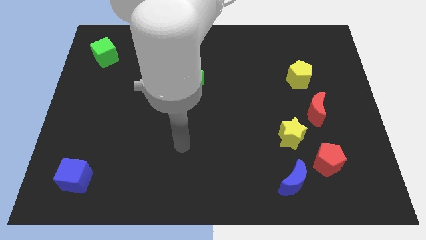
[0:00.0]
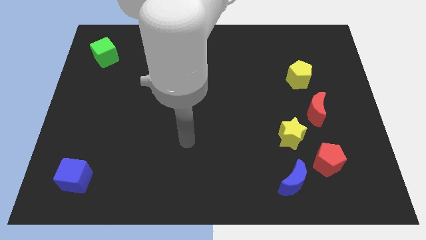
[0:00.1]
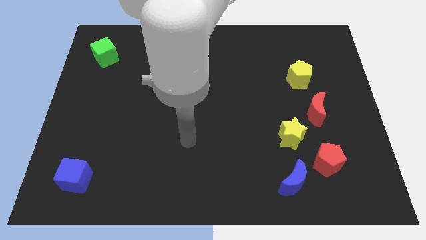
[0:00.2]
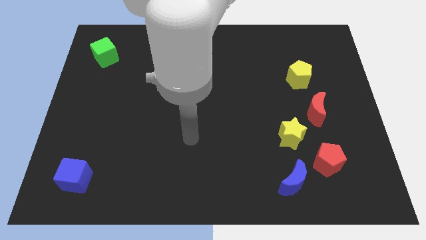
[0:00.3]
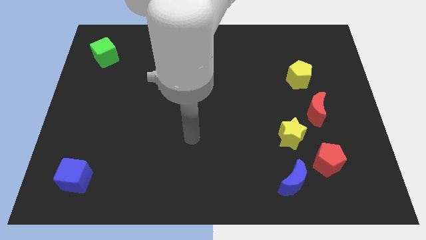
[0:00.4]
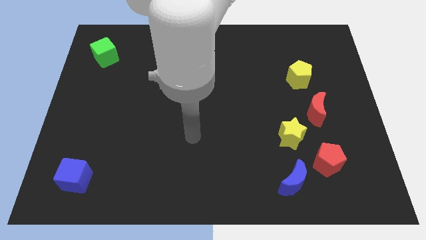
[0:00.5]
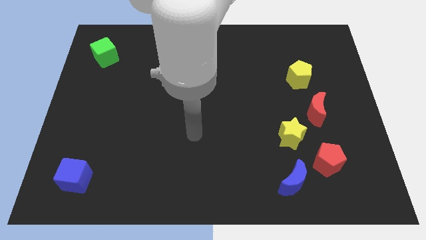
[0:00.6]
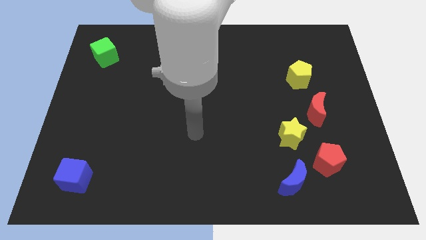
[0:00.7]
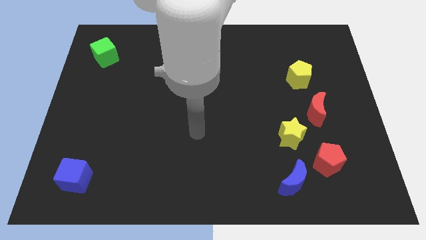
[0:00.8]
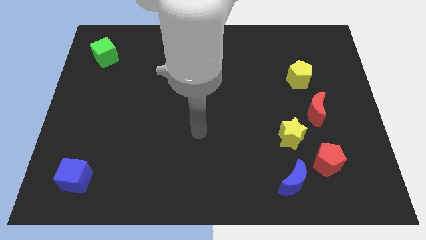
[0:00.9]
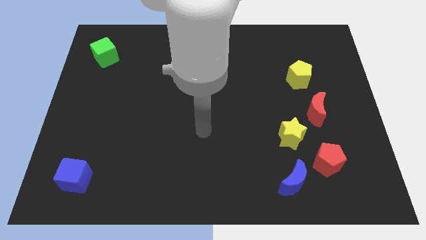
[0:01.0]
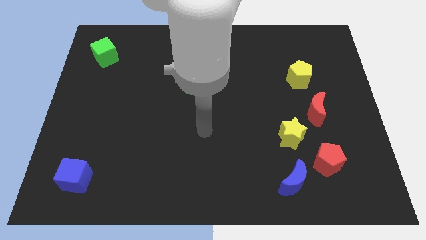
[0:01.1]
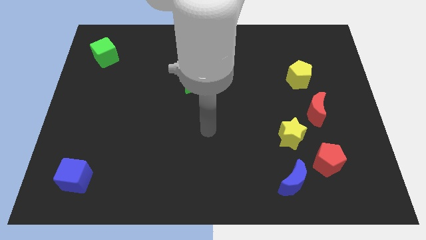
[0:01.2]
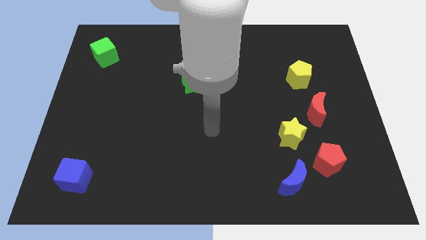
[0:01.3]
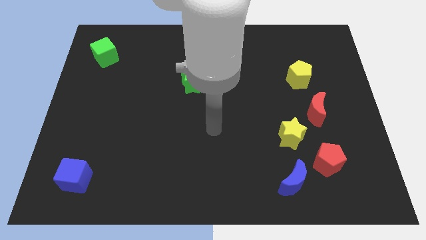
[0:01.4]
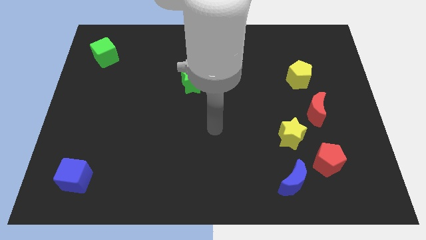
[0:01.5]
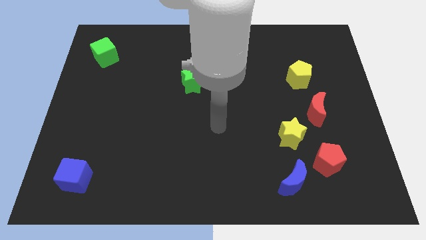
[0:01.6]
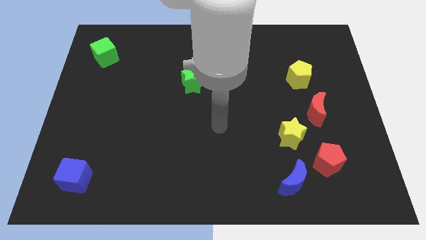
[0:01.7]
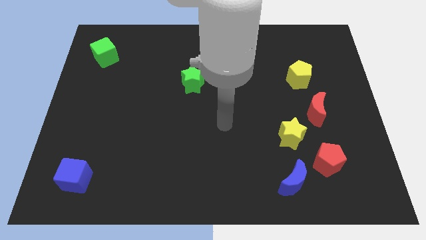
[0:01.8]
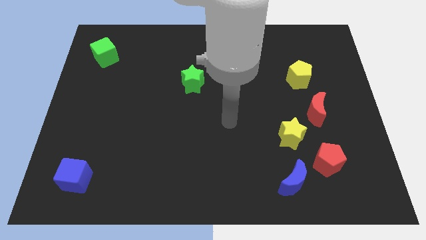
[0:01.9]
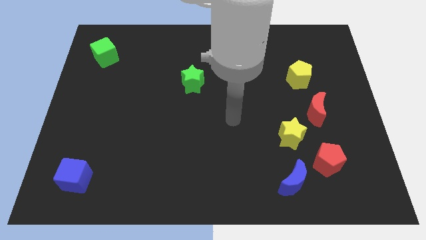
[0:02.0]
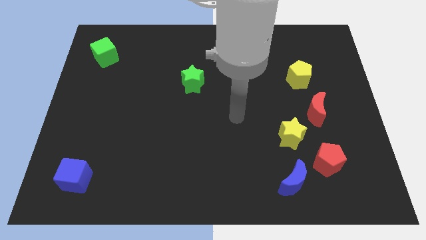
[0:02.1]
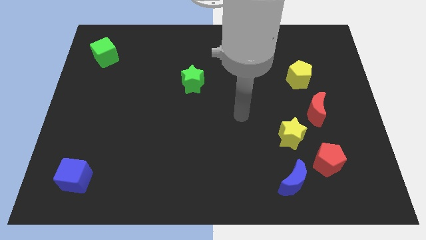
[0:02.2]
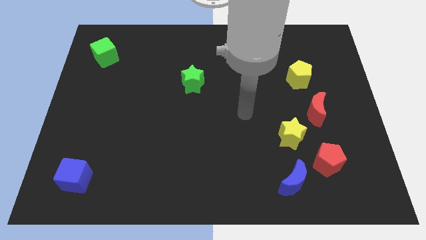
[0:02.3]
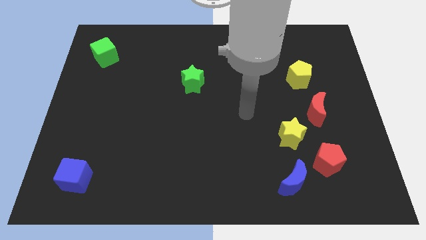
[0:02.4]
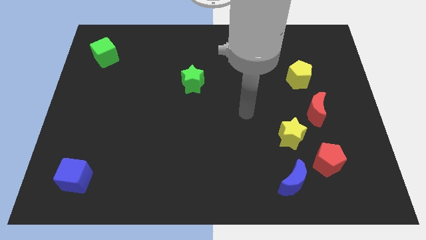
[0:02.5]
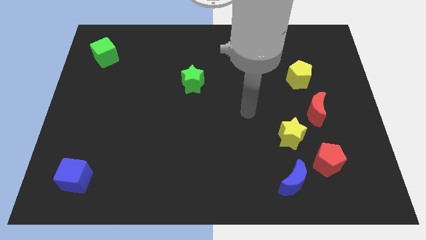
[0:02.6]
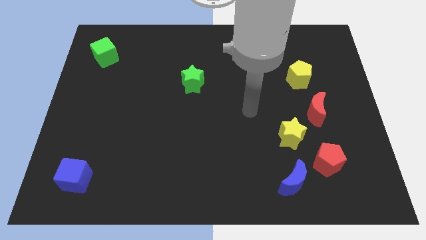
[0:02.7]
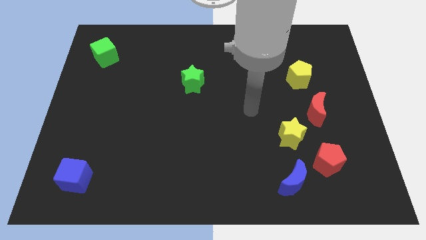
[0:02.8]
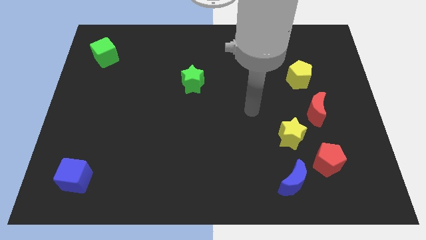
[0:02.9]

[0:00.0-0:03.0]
move your arm to the left side of the red moon

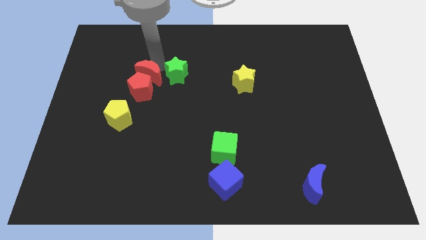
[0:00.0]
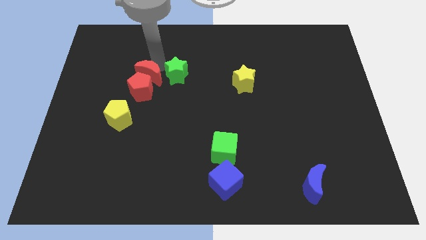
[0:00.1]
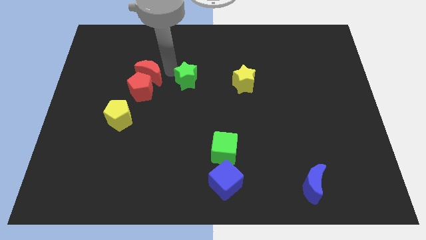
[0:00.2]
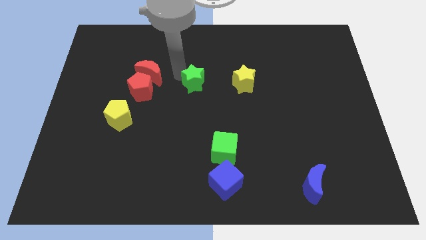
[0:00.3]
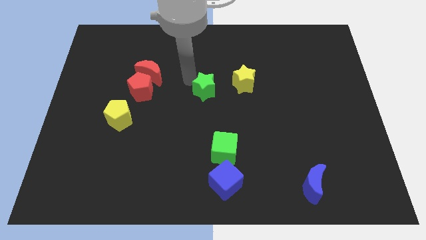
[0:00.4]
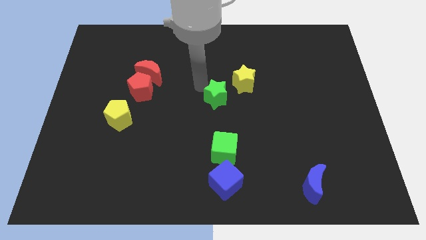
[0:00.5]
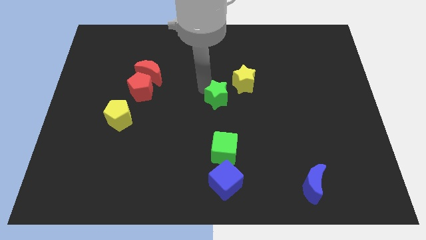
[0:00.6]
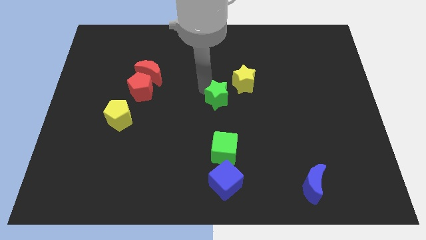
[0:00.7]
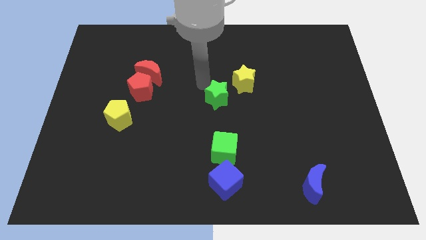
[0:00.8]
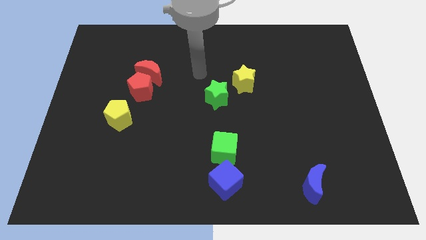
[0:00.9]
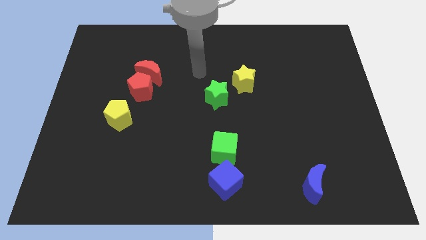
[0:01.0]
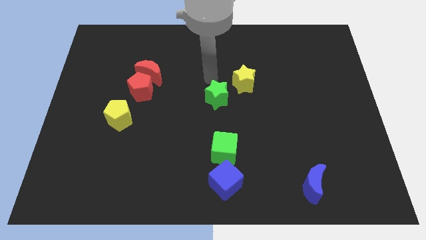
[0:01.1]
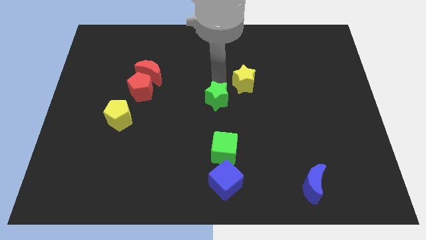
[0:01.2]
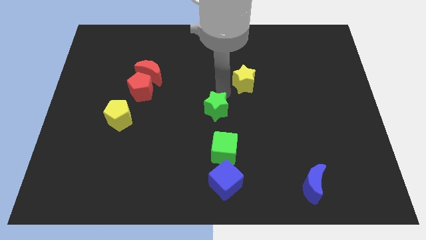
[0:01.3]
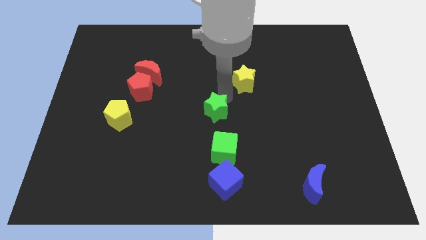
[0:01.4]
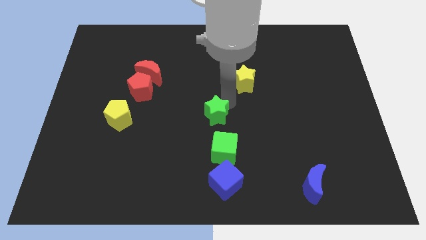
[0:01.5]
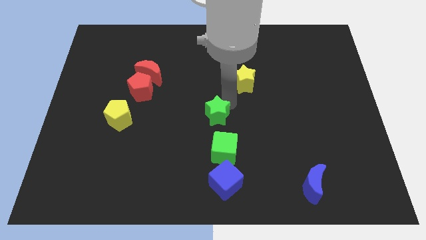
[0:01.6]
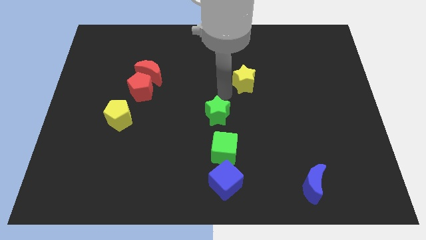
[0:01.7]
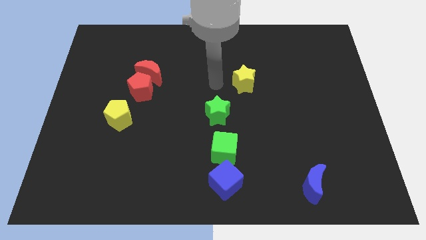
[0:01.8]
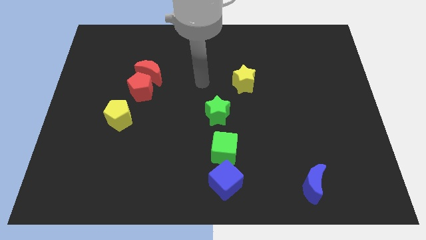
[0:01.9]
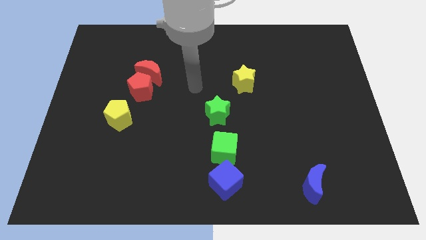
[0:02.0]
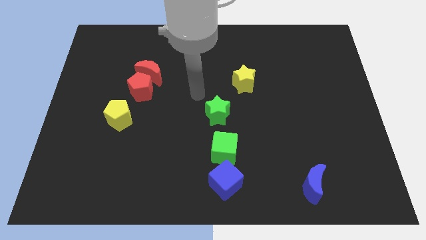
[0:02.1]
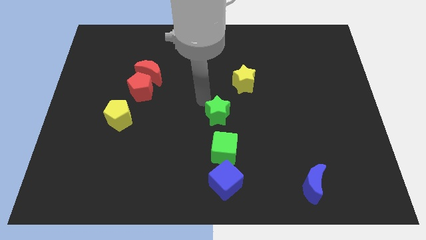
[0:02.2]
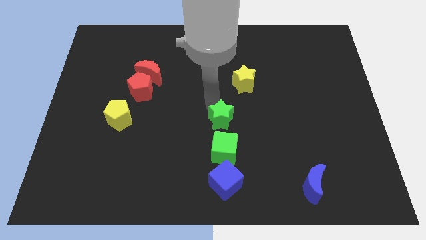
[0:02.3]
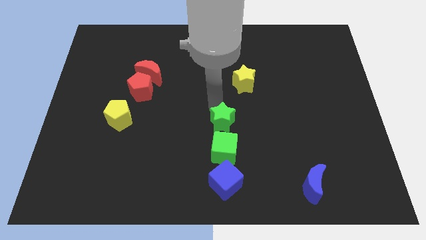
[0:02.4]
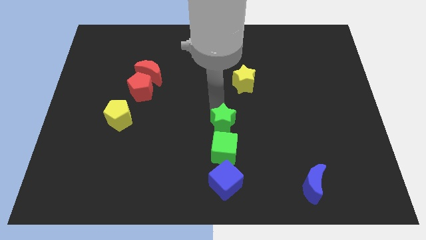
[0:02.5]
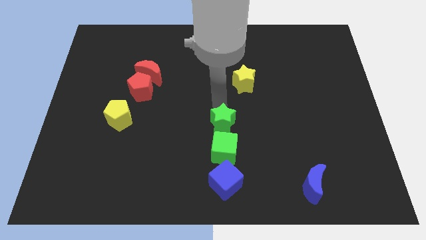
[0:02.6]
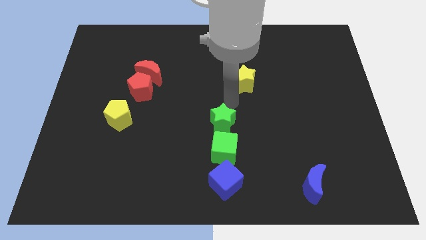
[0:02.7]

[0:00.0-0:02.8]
push the green star to the top of the green cube

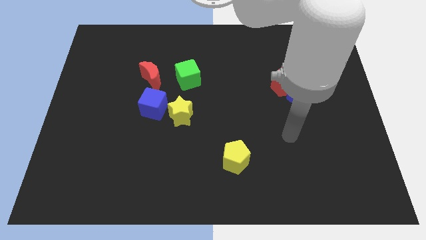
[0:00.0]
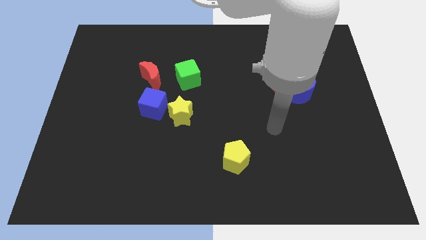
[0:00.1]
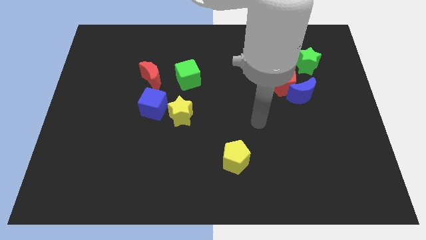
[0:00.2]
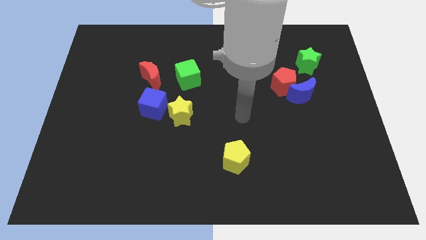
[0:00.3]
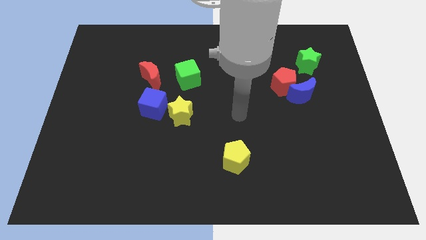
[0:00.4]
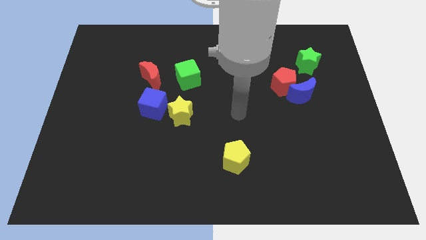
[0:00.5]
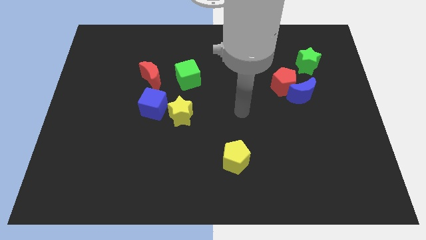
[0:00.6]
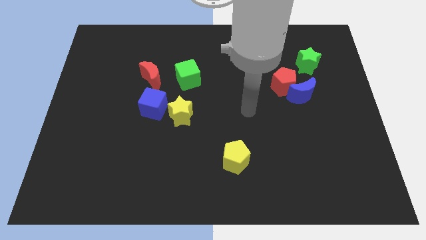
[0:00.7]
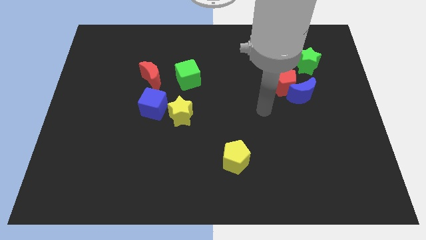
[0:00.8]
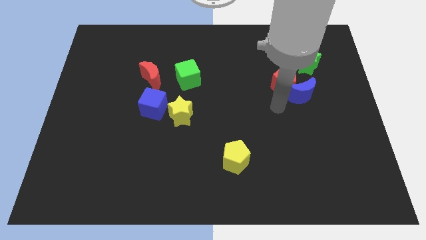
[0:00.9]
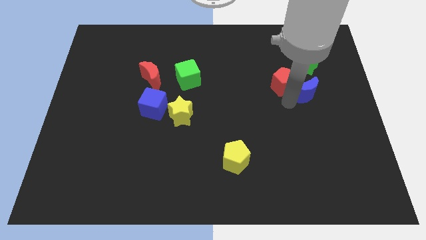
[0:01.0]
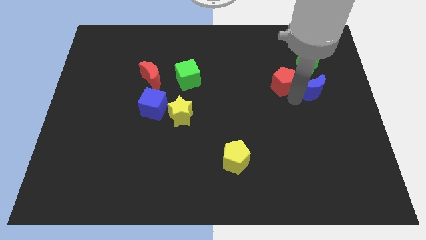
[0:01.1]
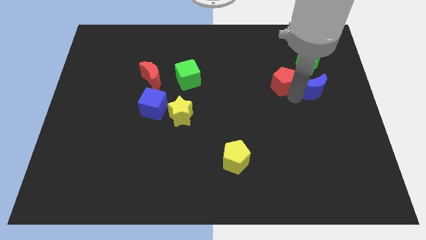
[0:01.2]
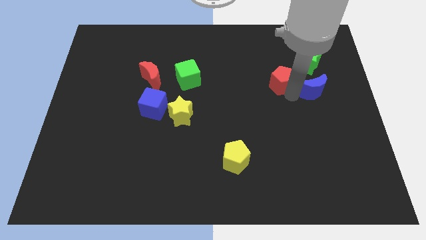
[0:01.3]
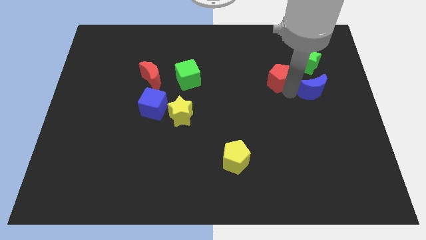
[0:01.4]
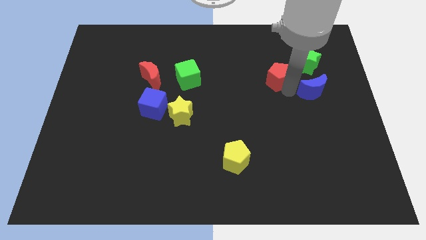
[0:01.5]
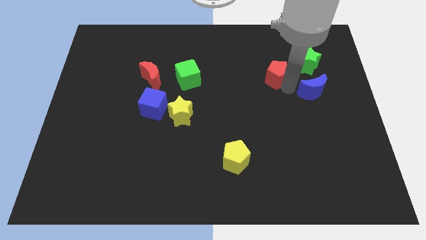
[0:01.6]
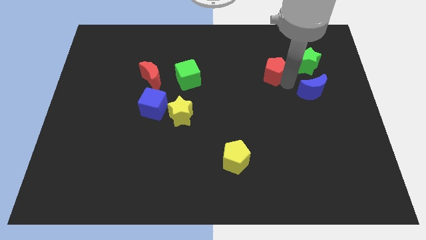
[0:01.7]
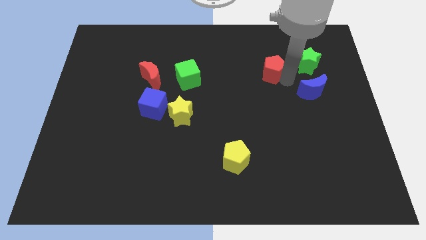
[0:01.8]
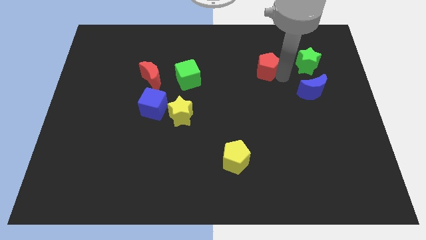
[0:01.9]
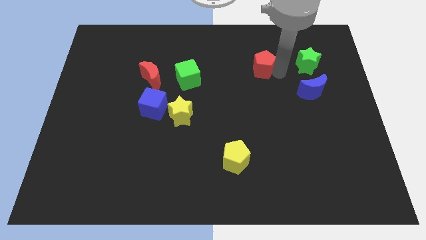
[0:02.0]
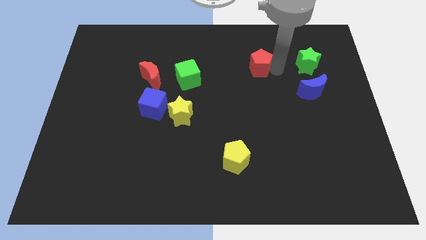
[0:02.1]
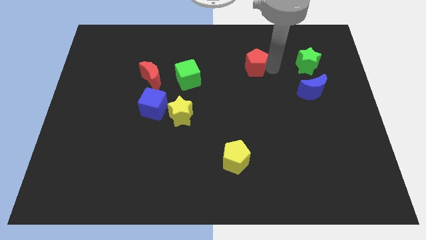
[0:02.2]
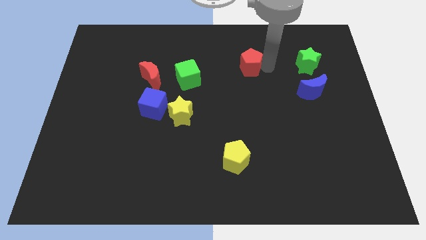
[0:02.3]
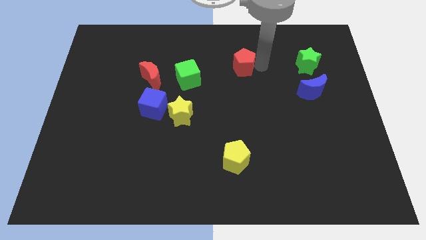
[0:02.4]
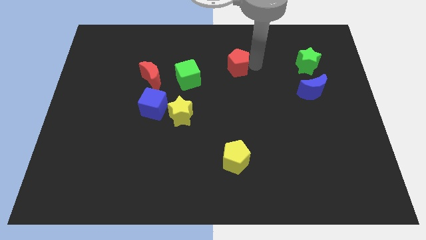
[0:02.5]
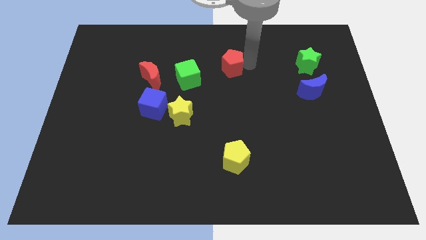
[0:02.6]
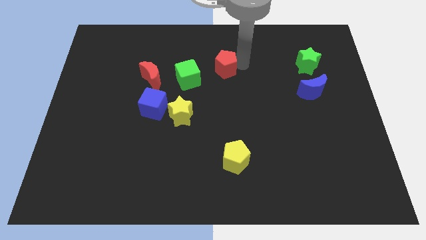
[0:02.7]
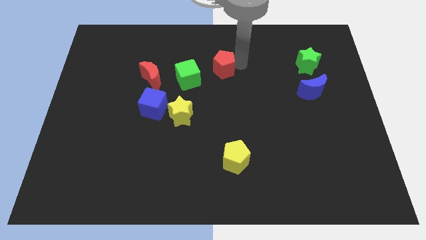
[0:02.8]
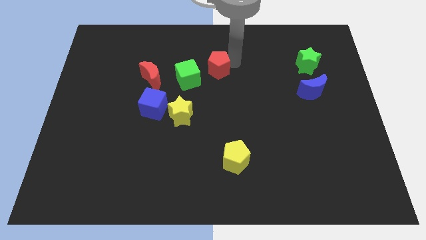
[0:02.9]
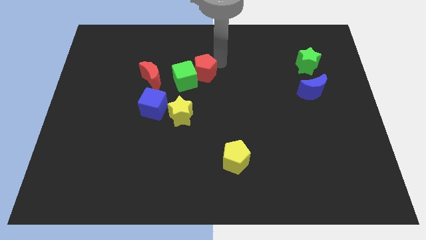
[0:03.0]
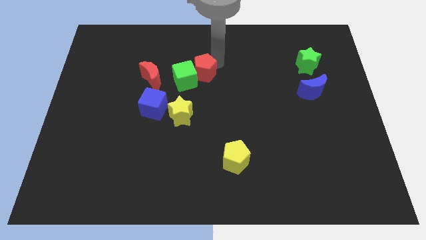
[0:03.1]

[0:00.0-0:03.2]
move red pentagon towards green cube
